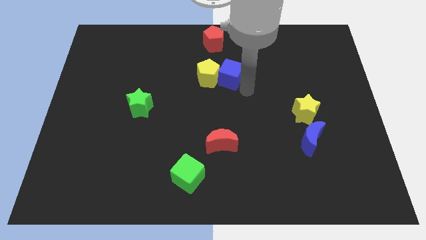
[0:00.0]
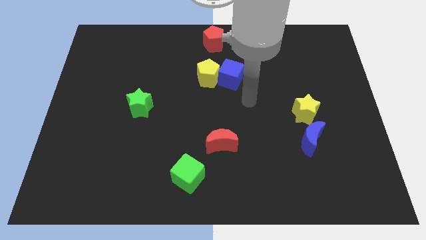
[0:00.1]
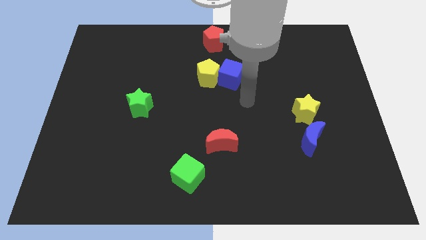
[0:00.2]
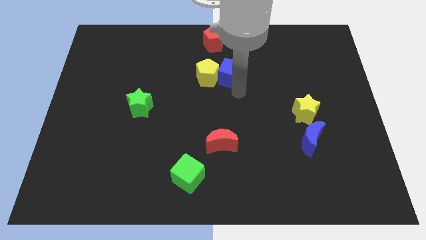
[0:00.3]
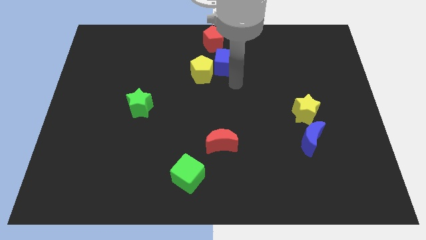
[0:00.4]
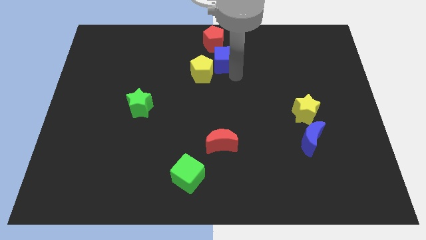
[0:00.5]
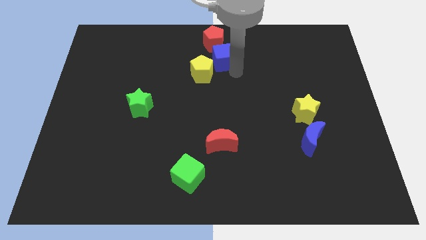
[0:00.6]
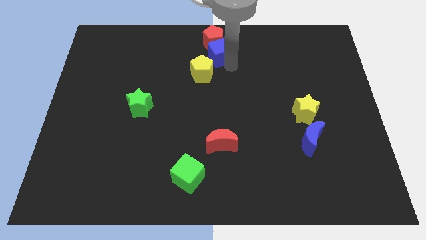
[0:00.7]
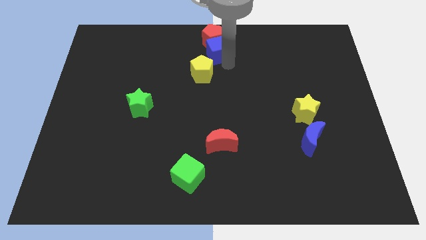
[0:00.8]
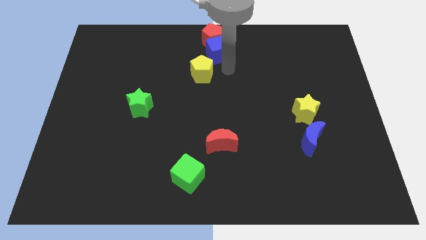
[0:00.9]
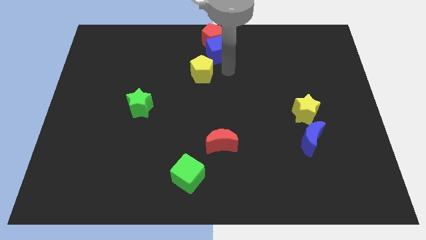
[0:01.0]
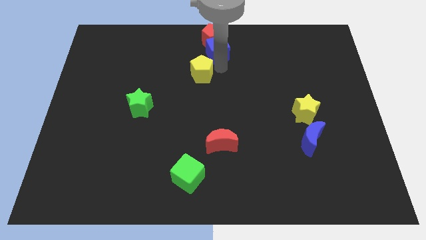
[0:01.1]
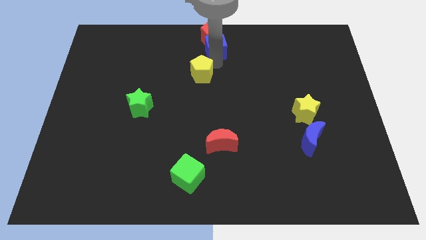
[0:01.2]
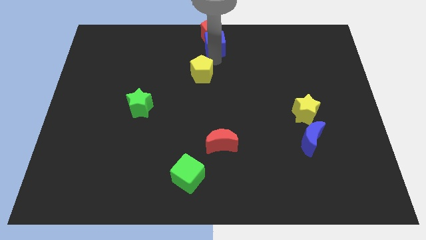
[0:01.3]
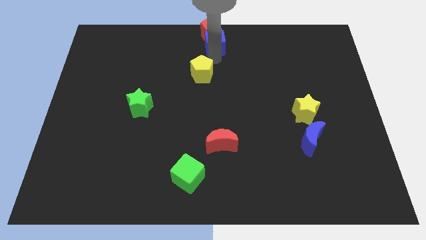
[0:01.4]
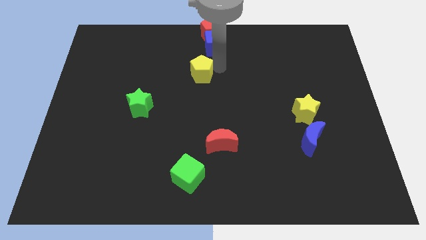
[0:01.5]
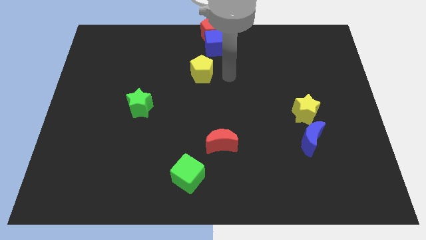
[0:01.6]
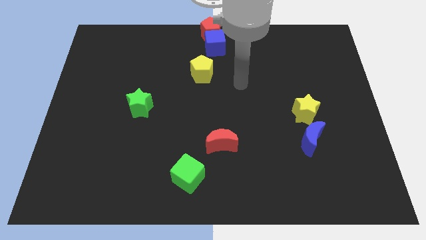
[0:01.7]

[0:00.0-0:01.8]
push the blue cube and red pentagon towards top

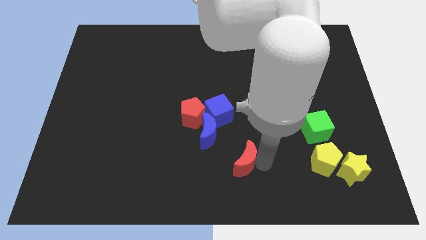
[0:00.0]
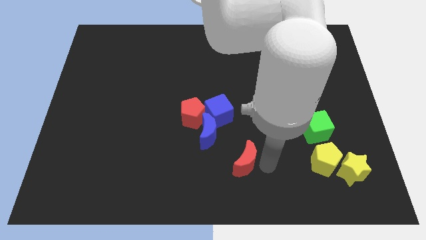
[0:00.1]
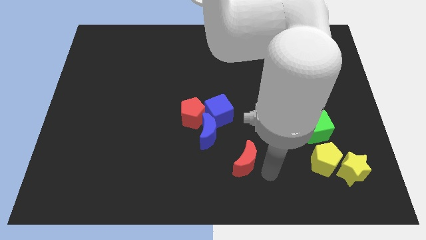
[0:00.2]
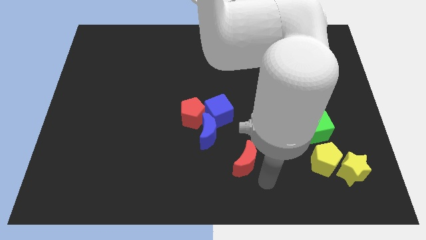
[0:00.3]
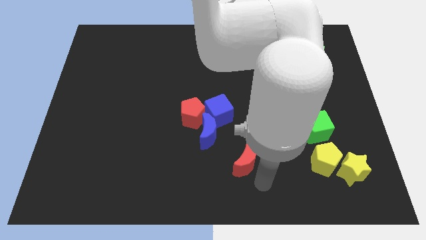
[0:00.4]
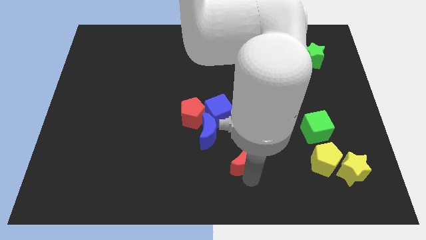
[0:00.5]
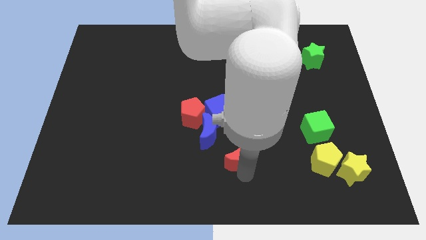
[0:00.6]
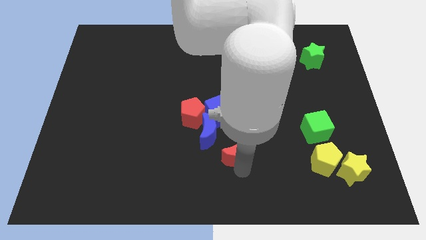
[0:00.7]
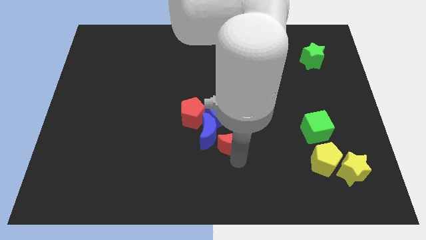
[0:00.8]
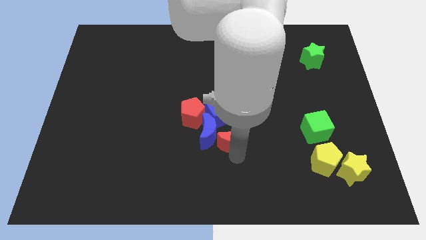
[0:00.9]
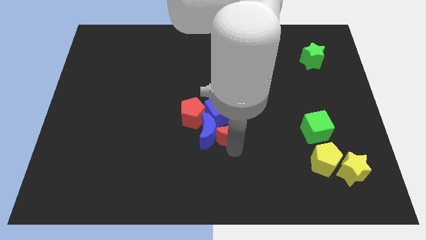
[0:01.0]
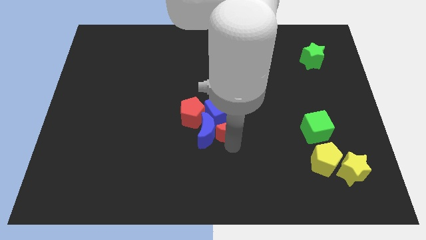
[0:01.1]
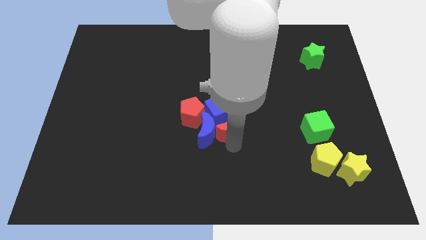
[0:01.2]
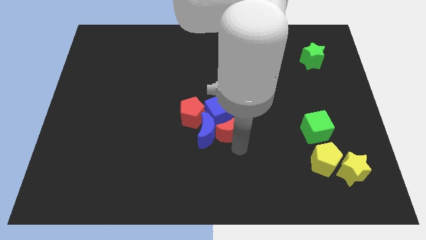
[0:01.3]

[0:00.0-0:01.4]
move red moon to the bottom of the blue cube

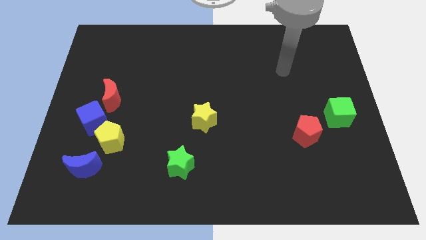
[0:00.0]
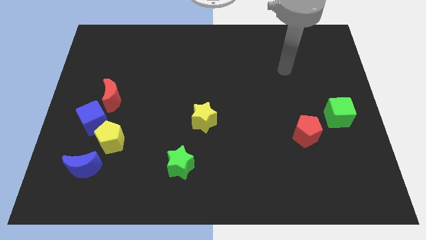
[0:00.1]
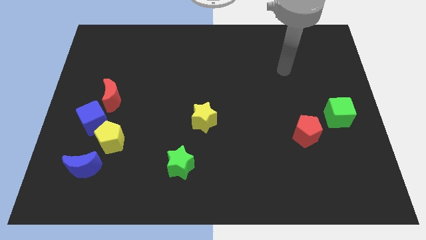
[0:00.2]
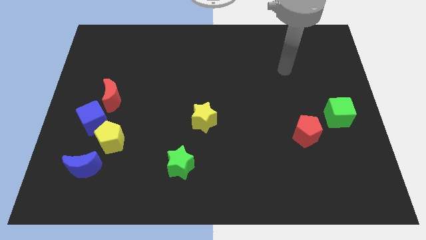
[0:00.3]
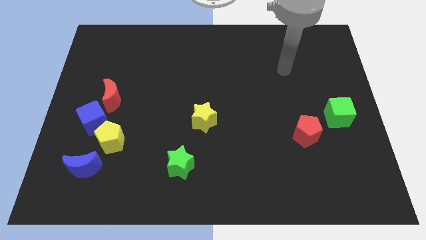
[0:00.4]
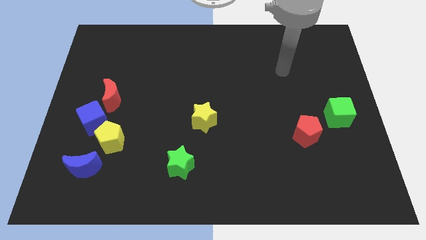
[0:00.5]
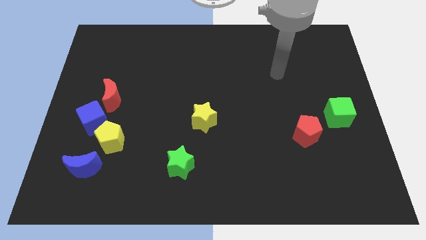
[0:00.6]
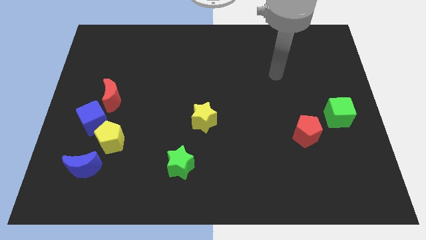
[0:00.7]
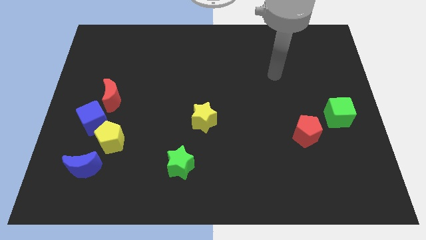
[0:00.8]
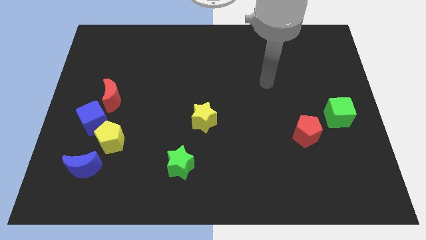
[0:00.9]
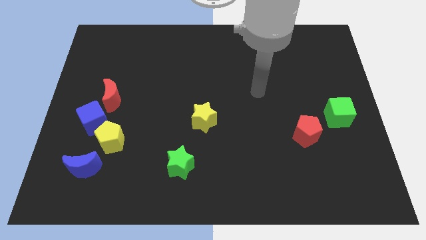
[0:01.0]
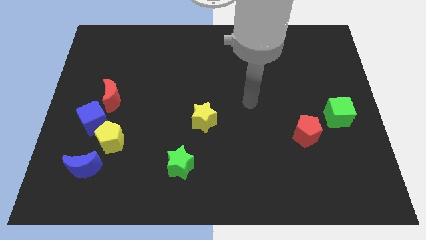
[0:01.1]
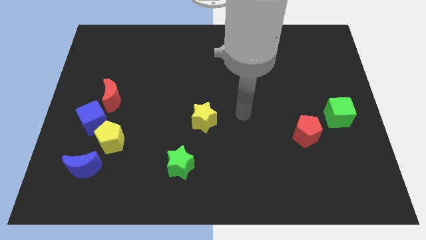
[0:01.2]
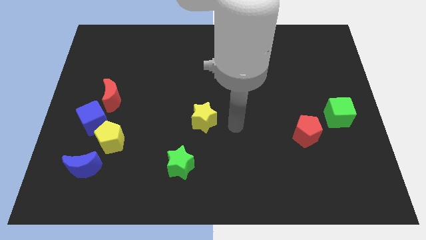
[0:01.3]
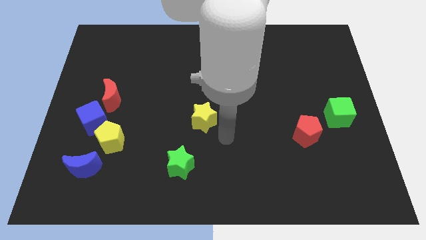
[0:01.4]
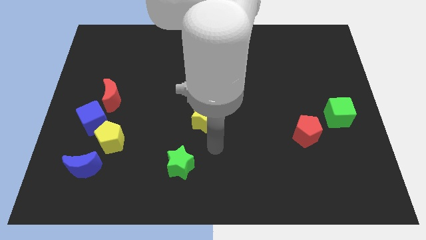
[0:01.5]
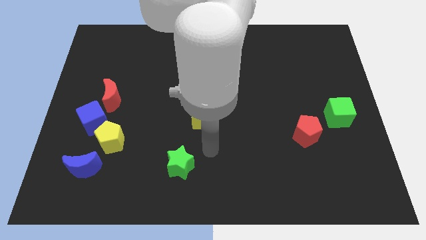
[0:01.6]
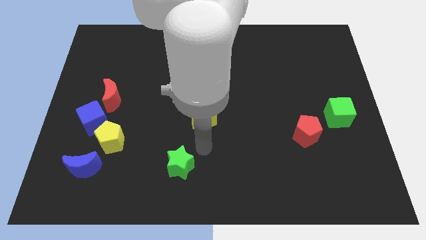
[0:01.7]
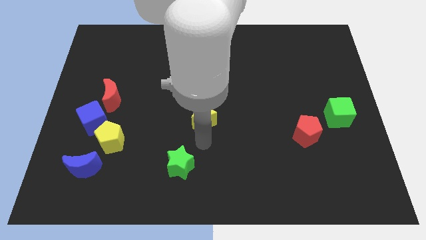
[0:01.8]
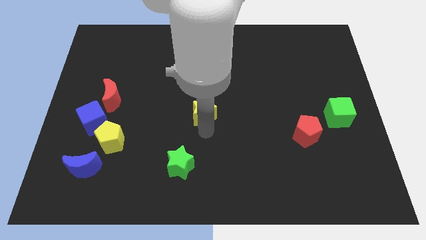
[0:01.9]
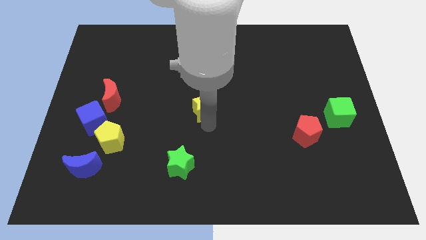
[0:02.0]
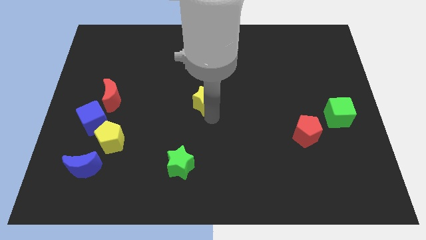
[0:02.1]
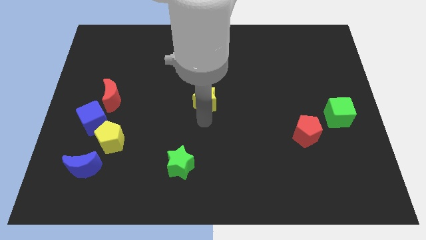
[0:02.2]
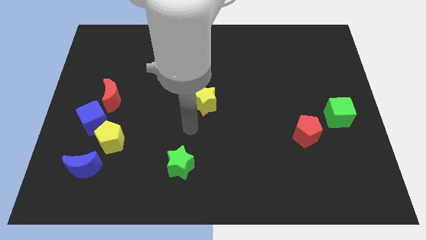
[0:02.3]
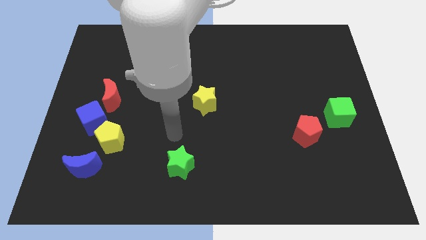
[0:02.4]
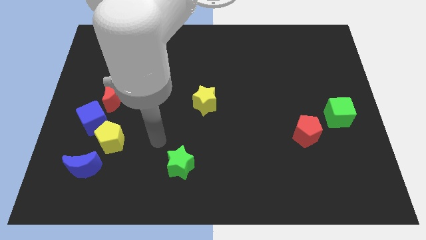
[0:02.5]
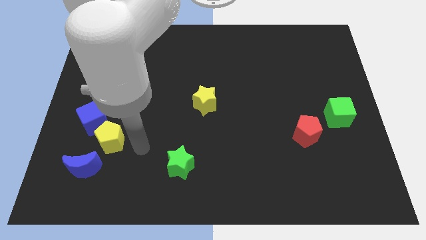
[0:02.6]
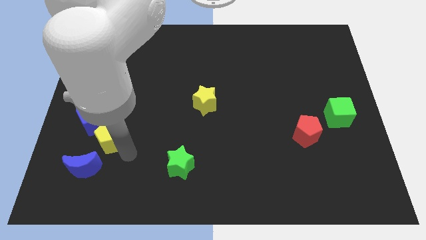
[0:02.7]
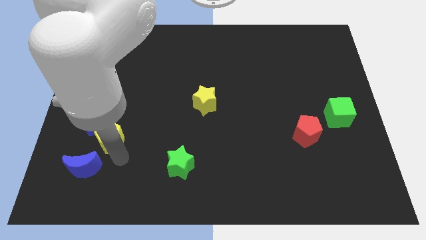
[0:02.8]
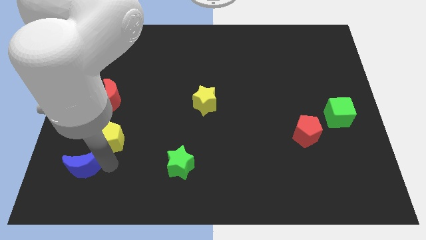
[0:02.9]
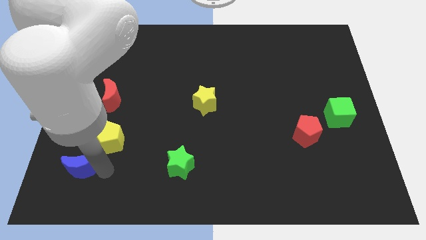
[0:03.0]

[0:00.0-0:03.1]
place the yellow star to the right of the red crescent

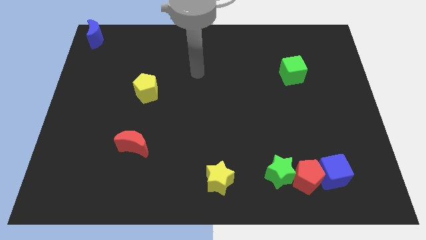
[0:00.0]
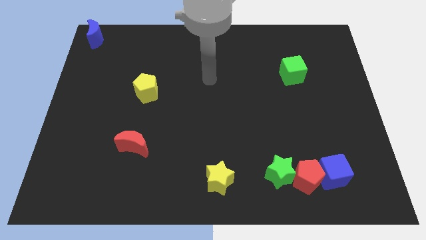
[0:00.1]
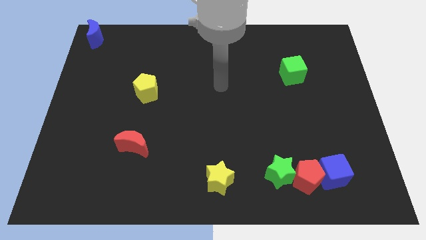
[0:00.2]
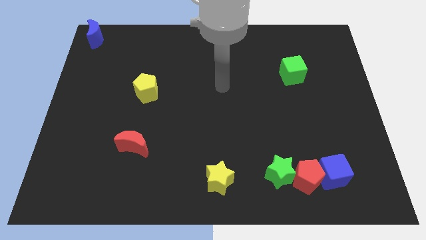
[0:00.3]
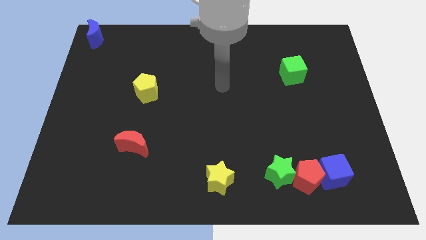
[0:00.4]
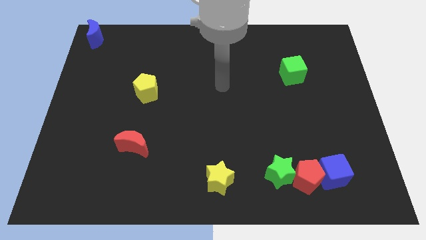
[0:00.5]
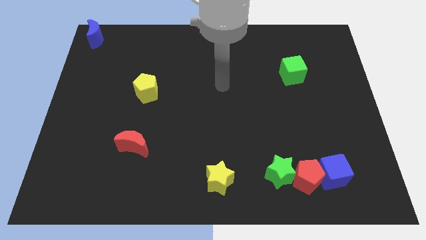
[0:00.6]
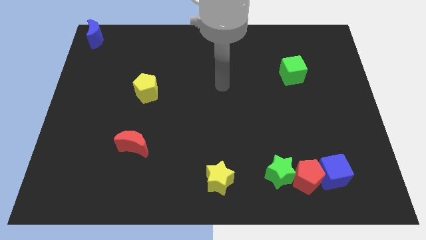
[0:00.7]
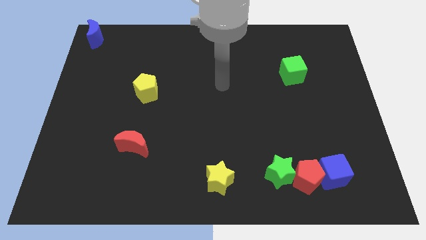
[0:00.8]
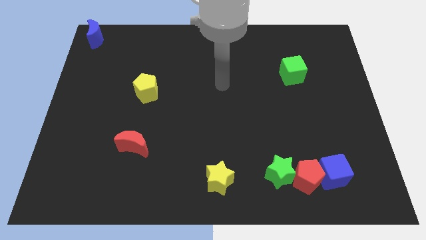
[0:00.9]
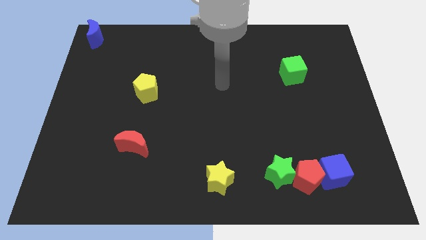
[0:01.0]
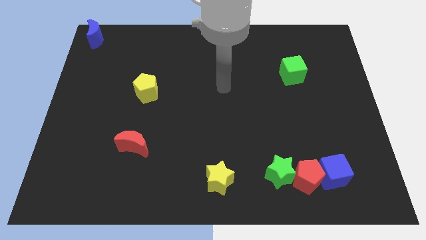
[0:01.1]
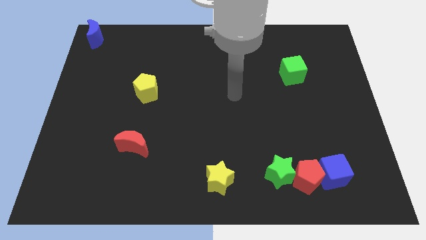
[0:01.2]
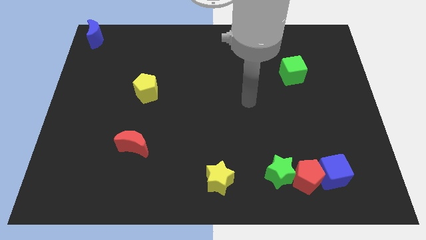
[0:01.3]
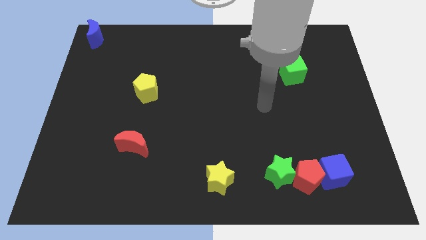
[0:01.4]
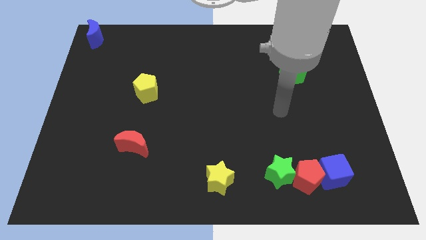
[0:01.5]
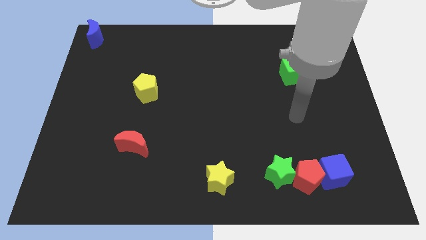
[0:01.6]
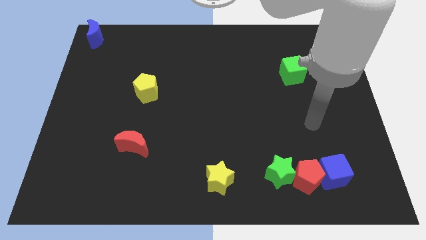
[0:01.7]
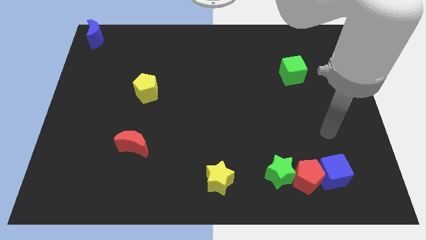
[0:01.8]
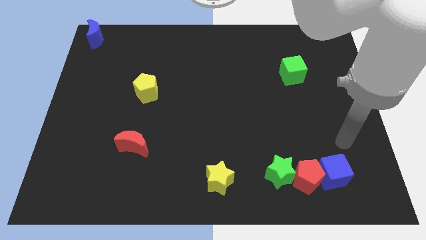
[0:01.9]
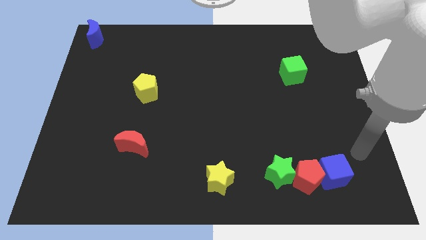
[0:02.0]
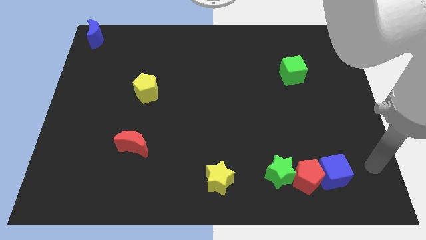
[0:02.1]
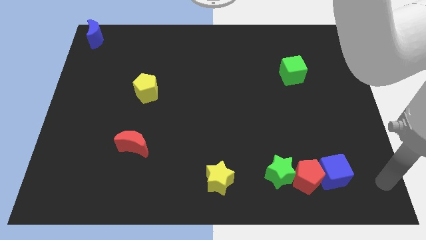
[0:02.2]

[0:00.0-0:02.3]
point your arm to the right of blue cube

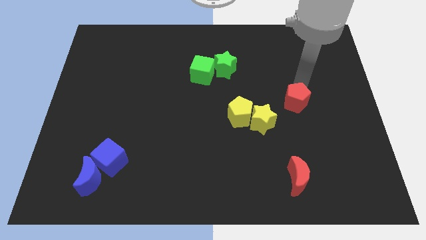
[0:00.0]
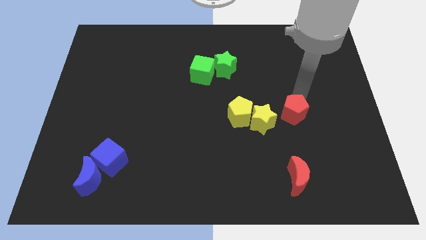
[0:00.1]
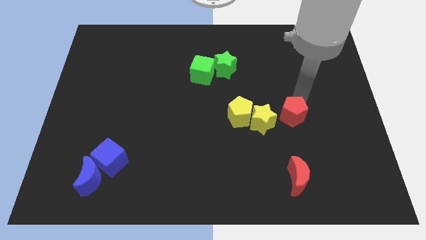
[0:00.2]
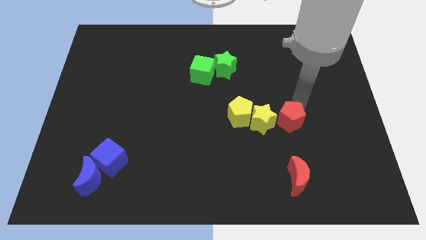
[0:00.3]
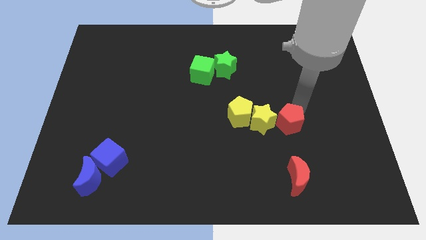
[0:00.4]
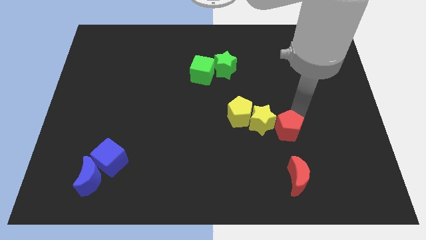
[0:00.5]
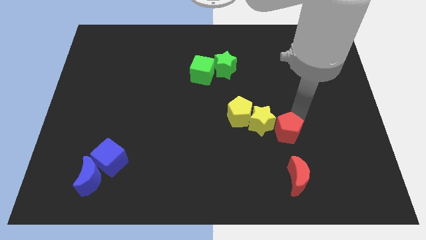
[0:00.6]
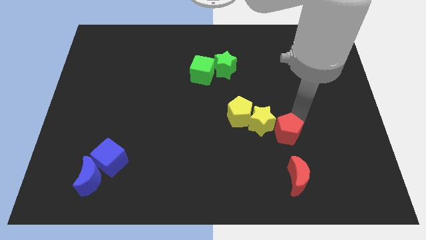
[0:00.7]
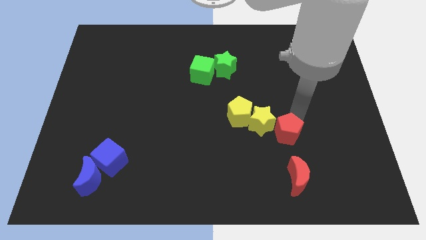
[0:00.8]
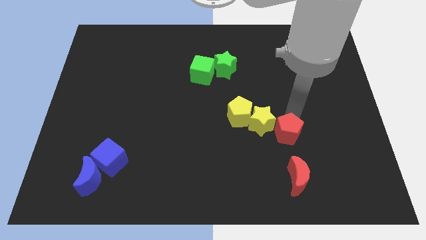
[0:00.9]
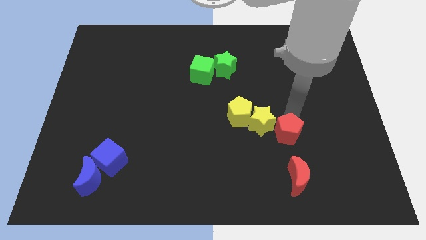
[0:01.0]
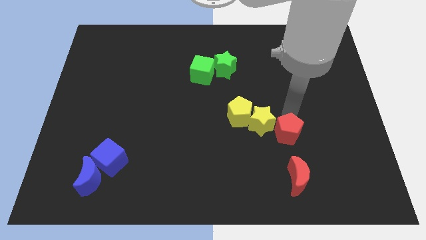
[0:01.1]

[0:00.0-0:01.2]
place the red pentagon to the right side of yellow star
